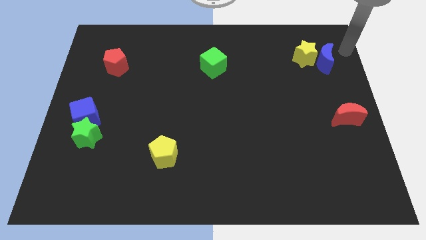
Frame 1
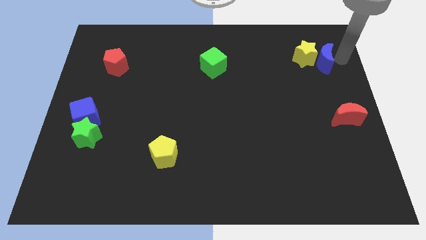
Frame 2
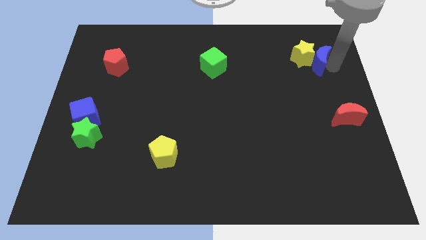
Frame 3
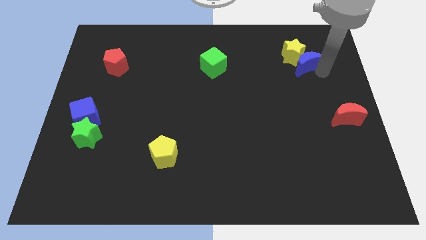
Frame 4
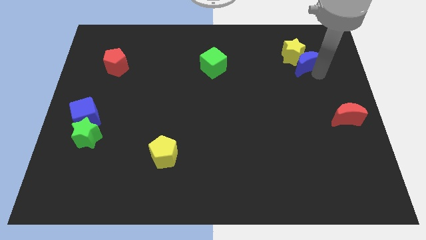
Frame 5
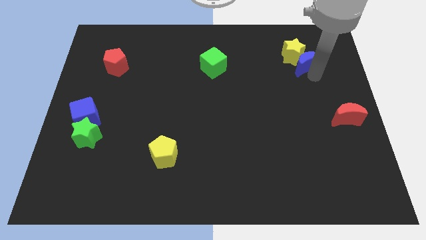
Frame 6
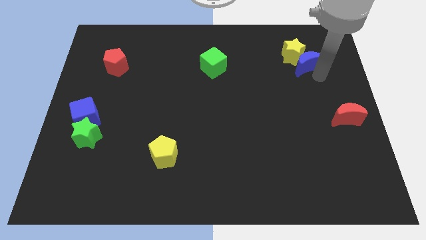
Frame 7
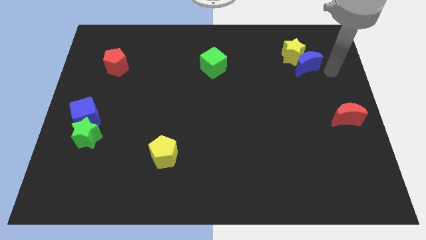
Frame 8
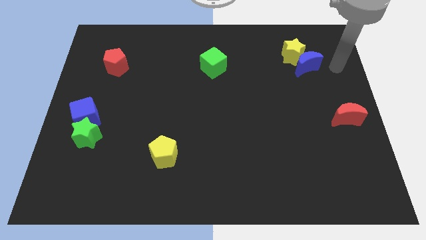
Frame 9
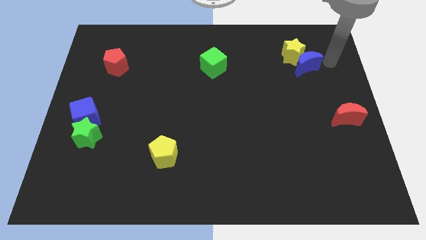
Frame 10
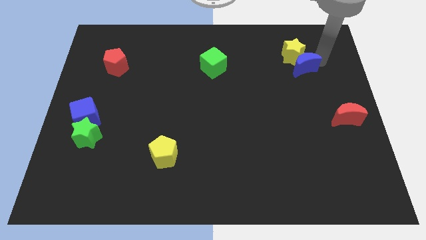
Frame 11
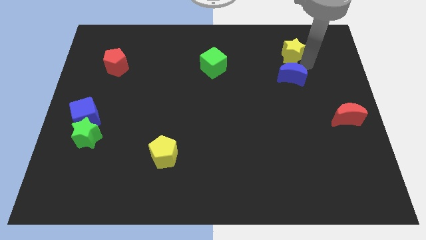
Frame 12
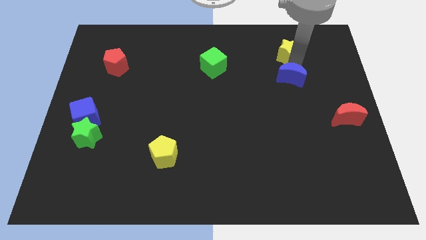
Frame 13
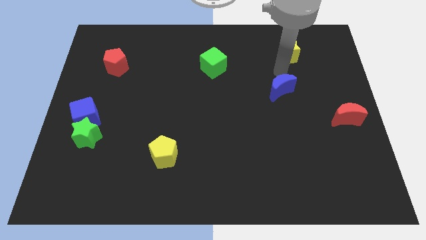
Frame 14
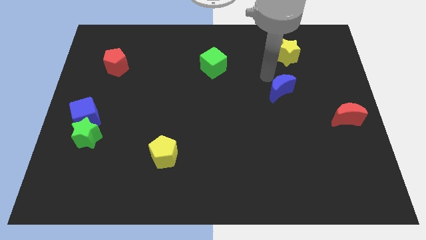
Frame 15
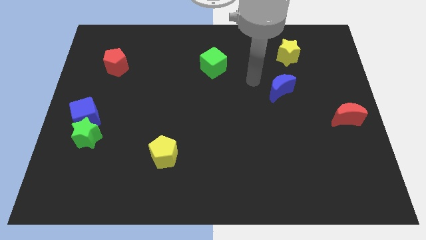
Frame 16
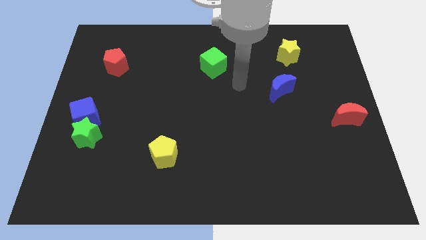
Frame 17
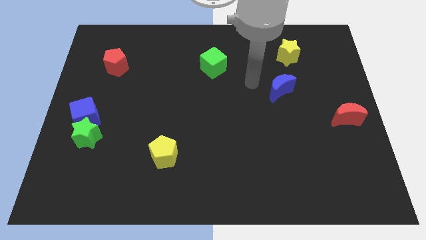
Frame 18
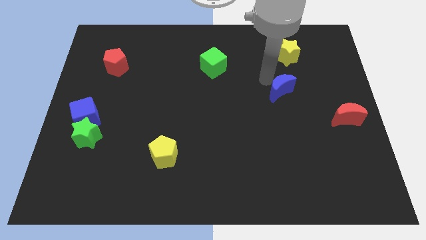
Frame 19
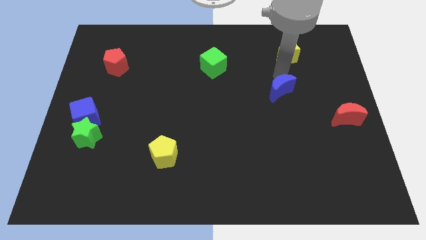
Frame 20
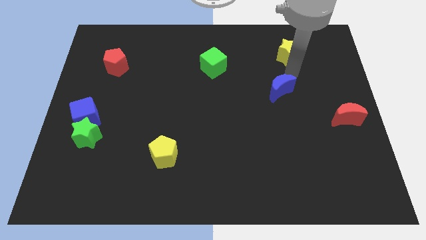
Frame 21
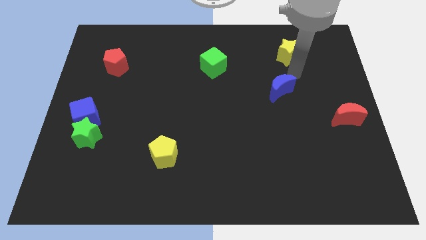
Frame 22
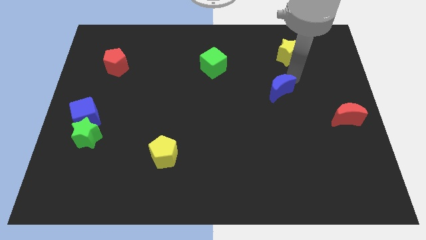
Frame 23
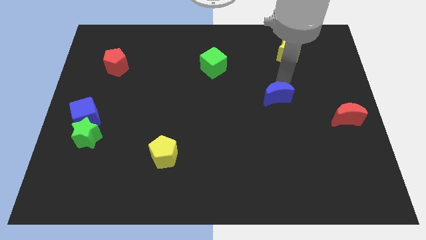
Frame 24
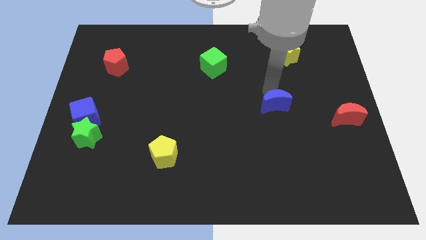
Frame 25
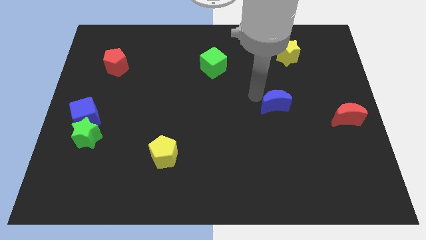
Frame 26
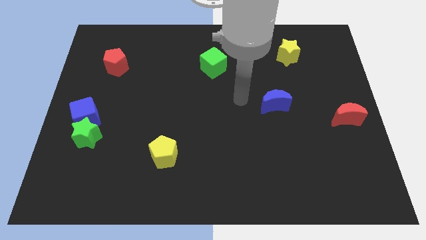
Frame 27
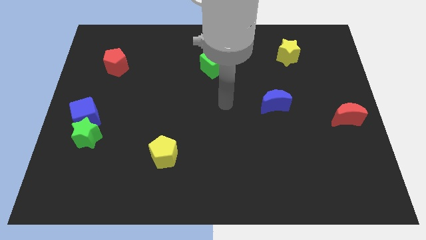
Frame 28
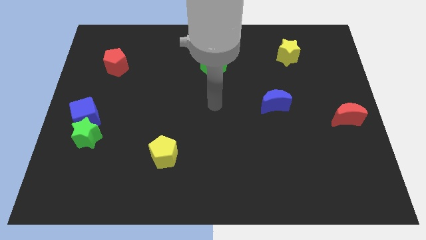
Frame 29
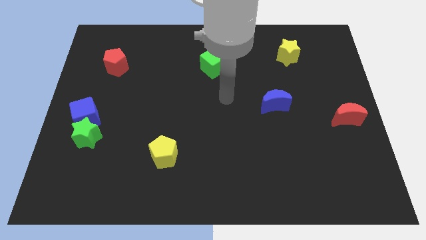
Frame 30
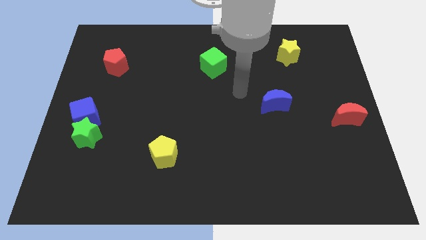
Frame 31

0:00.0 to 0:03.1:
place the blue moon diagonal to the green cube

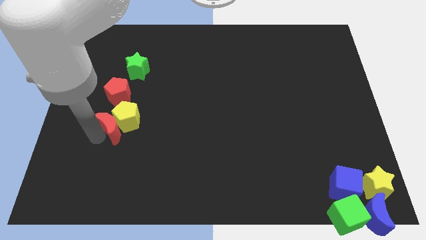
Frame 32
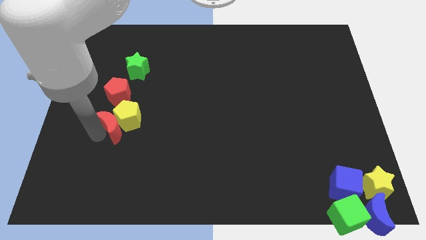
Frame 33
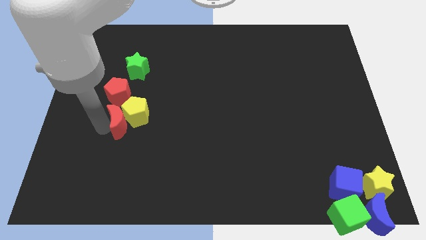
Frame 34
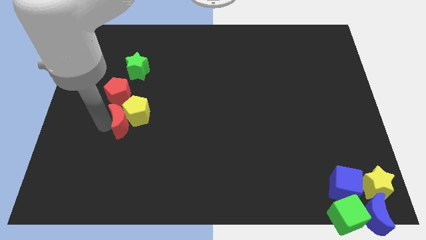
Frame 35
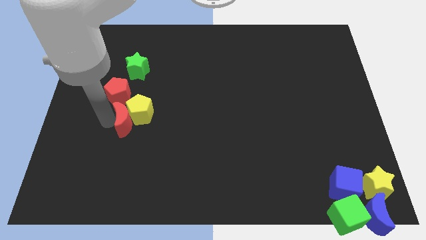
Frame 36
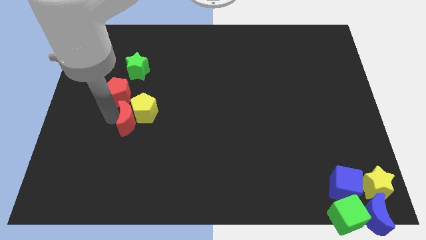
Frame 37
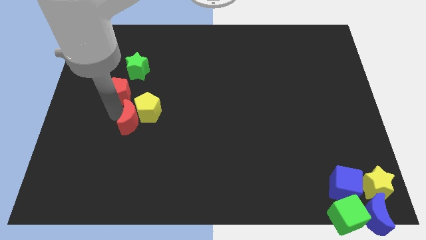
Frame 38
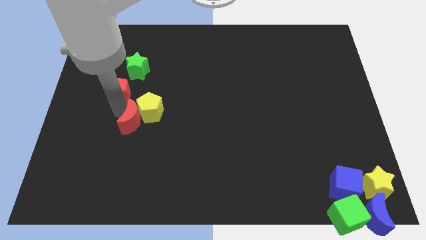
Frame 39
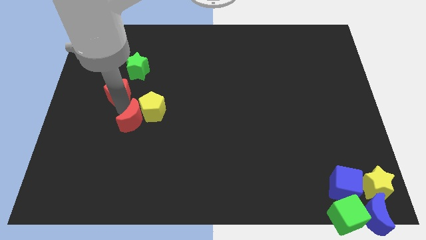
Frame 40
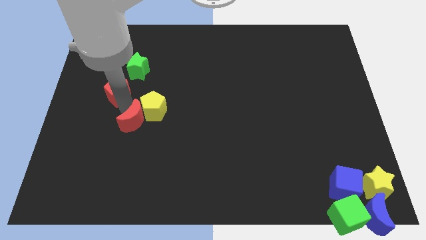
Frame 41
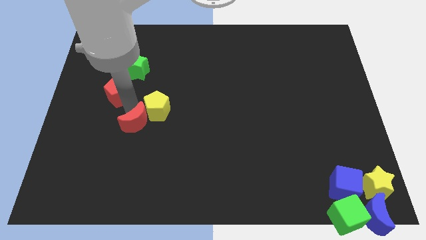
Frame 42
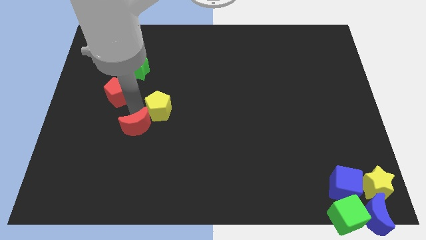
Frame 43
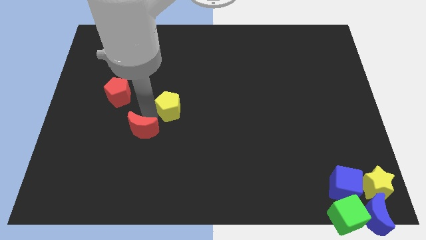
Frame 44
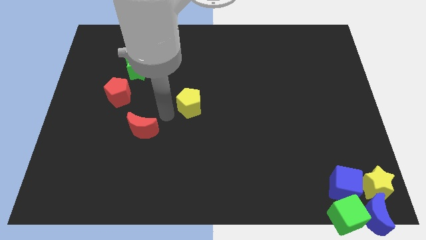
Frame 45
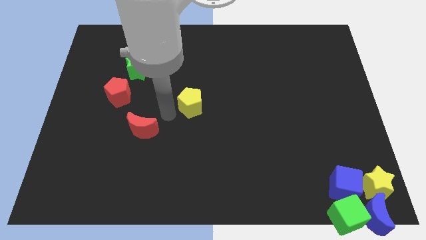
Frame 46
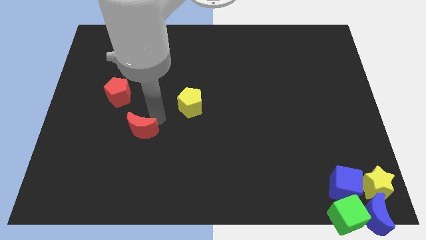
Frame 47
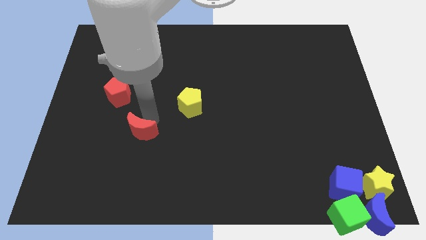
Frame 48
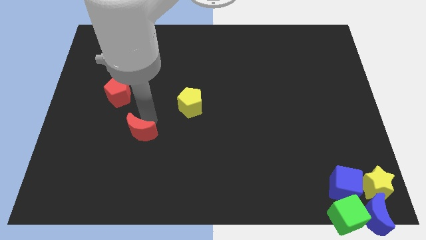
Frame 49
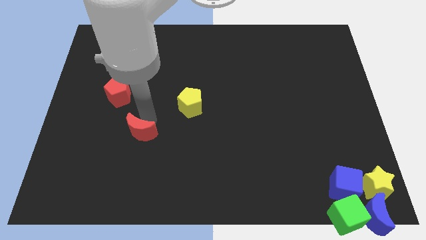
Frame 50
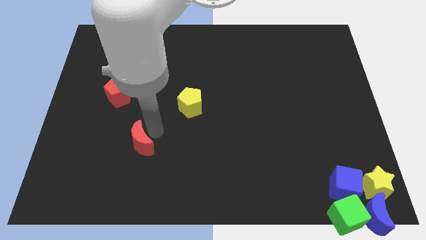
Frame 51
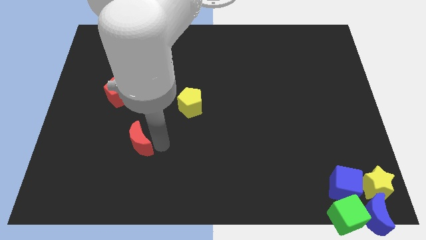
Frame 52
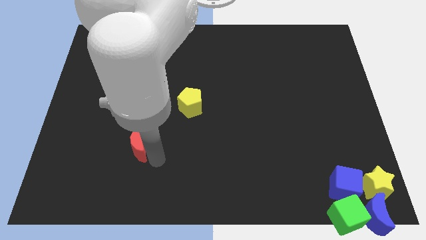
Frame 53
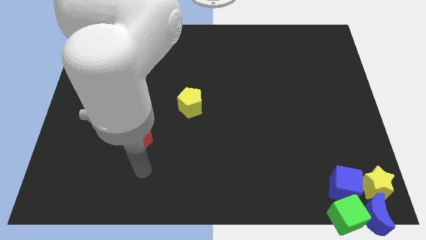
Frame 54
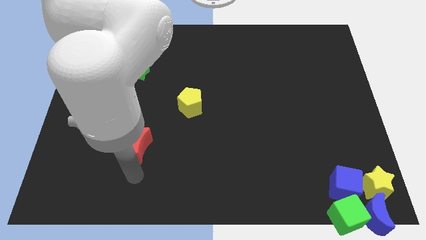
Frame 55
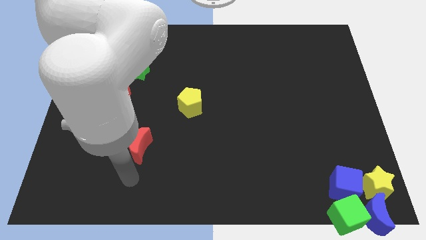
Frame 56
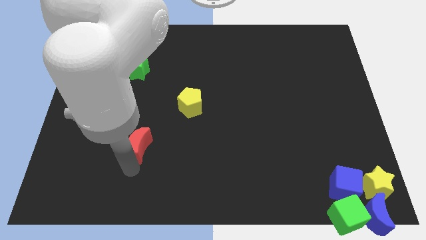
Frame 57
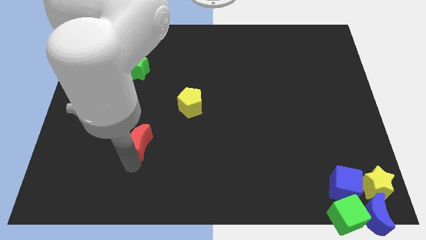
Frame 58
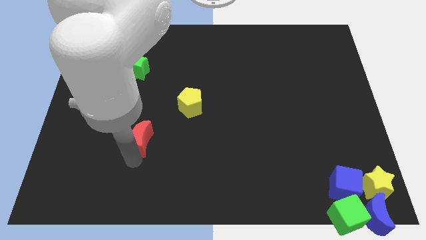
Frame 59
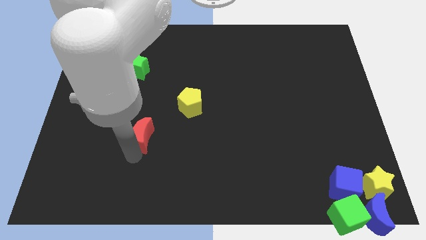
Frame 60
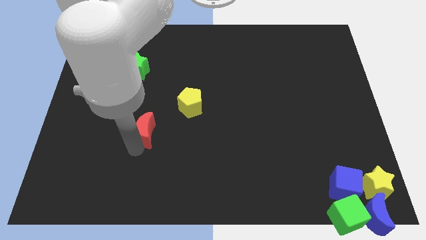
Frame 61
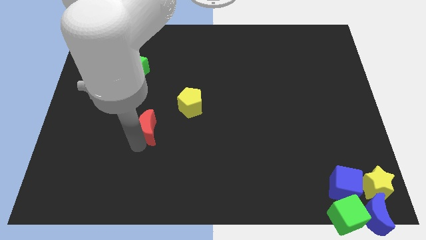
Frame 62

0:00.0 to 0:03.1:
separate the yellow pentagon and the red moon

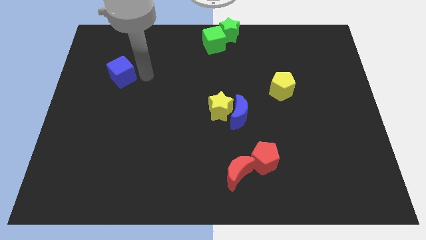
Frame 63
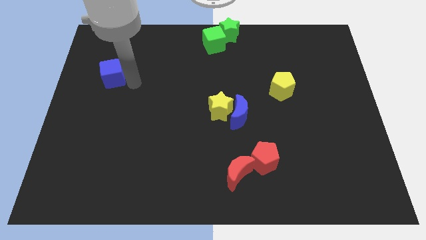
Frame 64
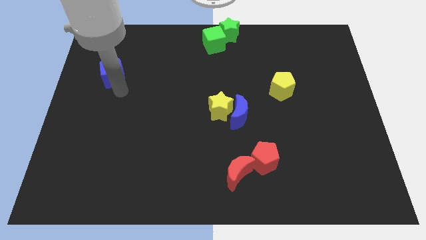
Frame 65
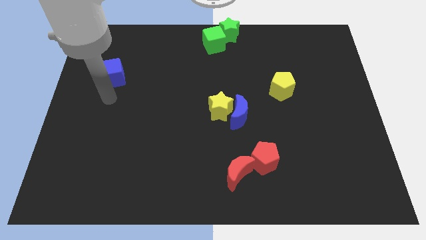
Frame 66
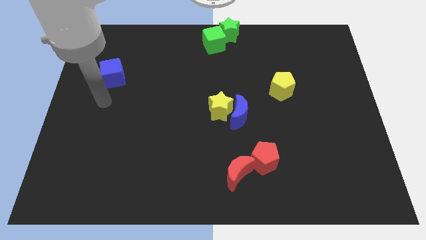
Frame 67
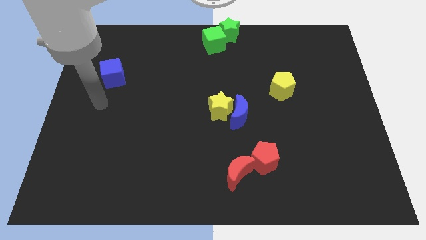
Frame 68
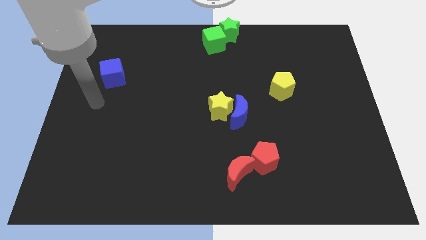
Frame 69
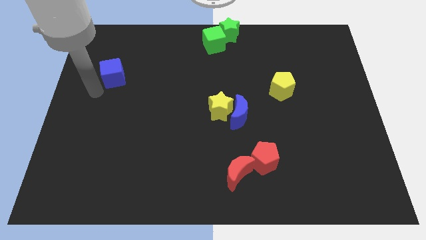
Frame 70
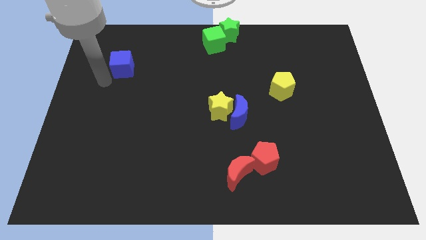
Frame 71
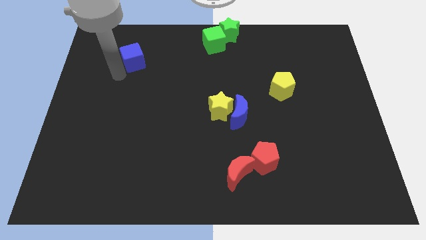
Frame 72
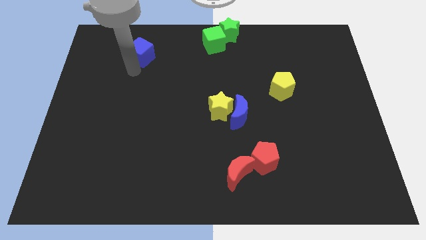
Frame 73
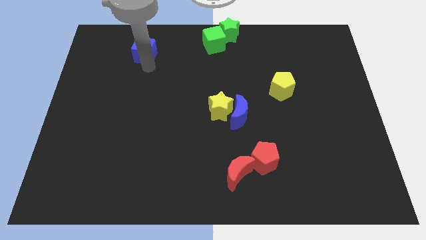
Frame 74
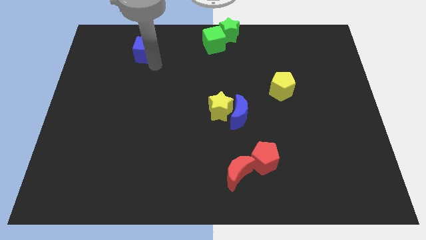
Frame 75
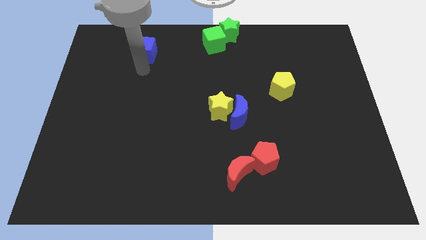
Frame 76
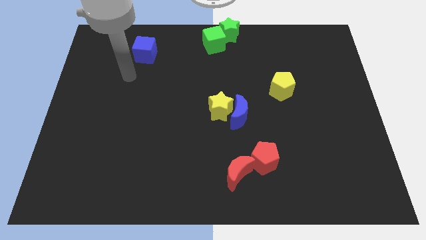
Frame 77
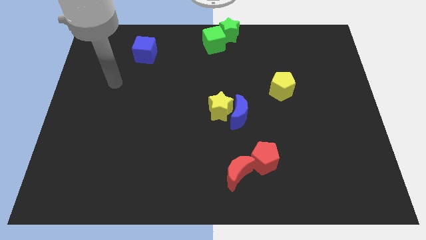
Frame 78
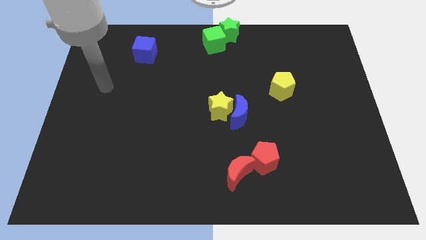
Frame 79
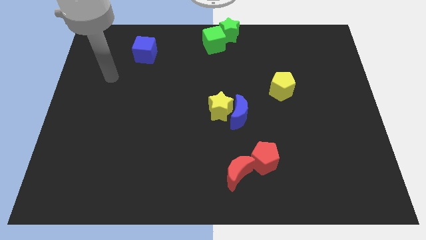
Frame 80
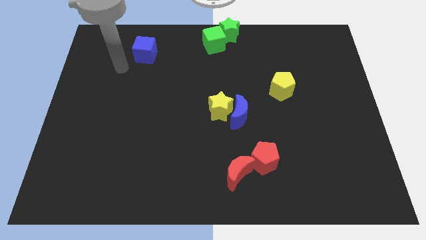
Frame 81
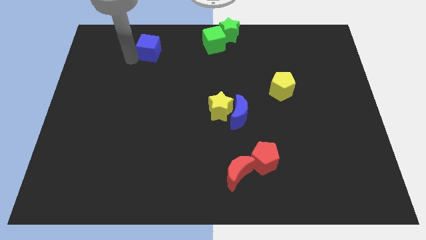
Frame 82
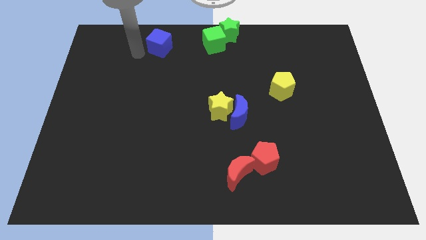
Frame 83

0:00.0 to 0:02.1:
move blue cube towards the yellow star

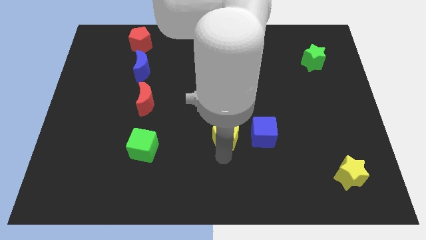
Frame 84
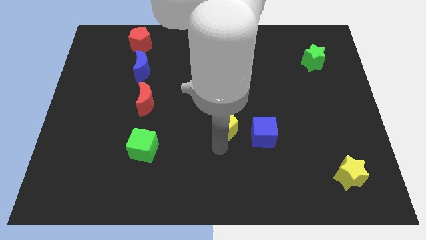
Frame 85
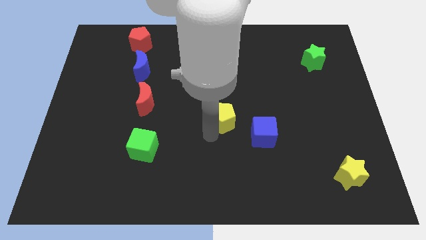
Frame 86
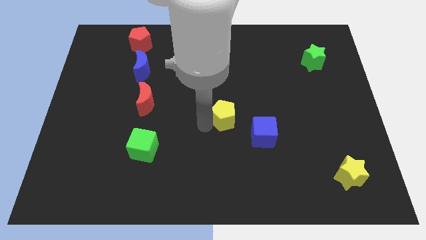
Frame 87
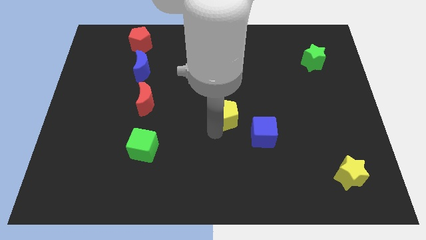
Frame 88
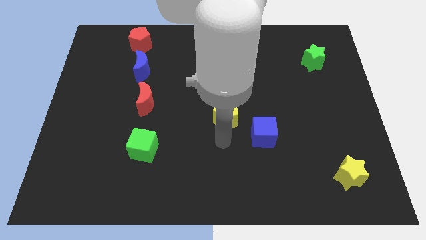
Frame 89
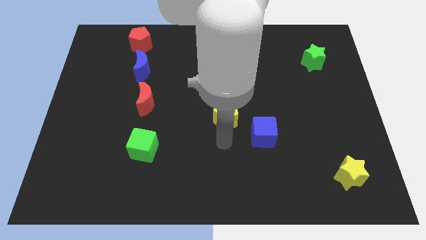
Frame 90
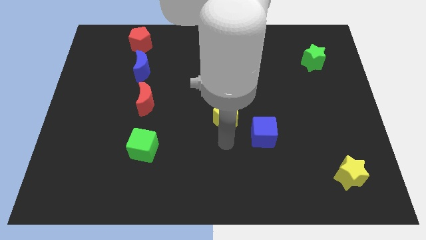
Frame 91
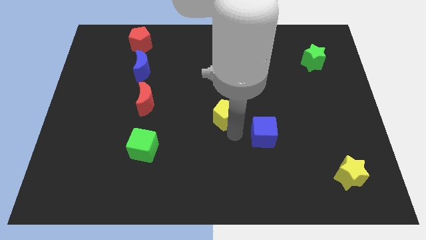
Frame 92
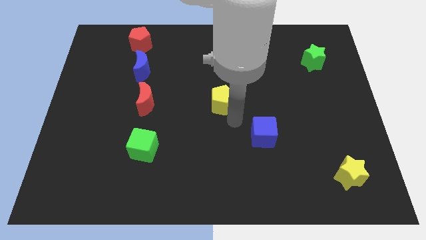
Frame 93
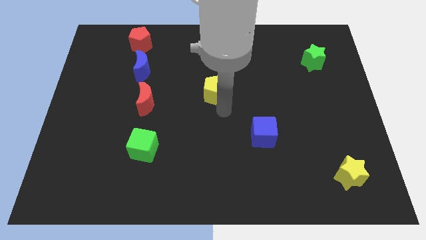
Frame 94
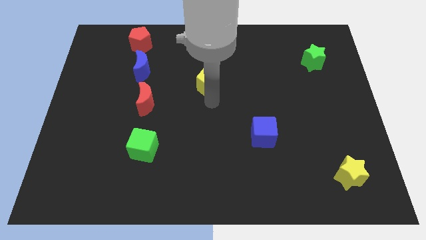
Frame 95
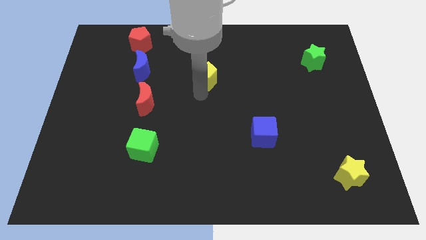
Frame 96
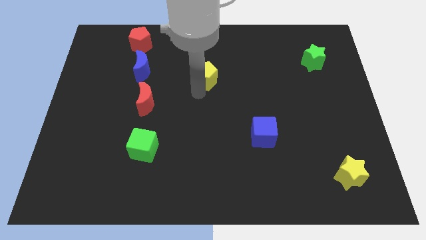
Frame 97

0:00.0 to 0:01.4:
drag the yellow pentagon to the center
